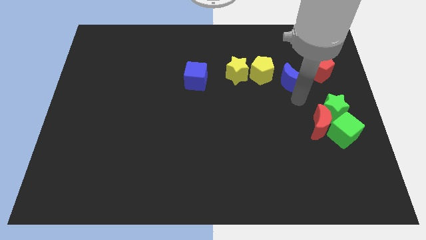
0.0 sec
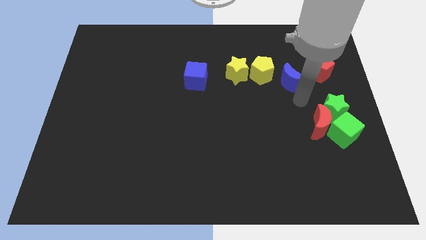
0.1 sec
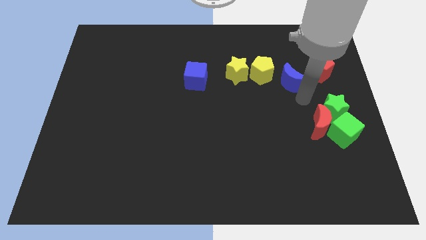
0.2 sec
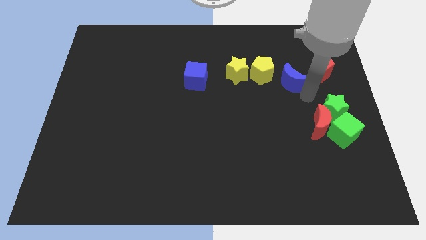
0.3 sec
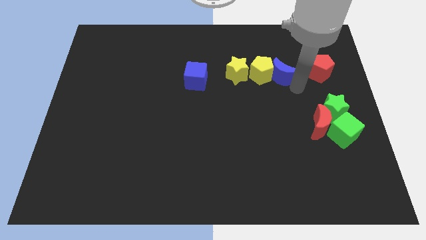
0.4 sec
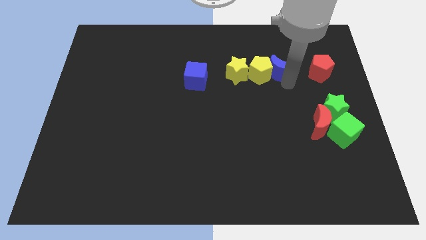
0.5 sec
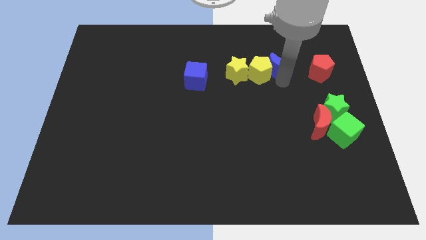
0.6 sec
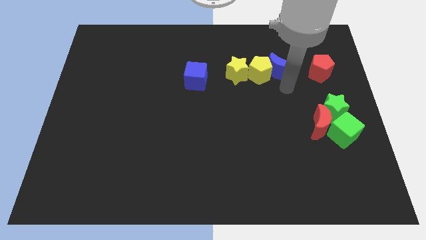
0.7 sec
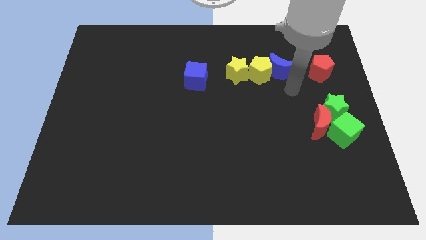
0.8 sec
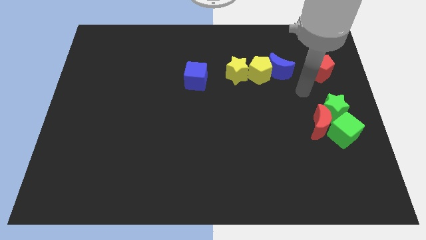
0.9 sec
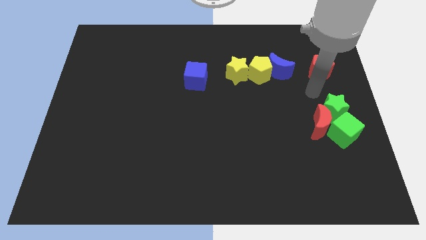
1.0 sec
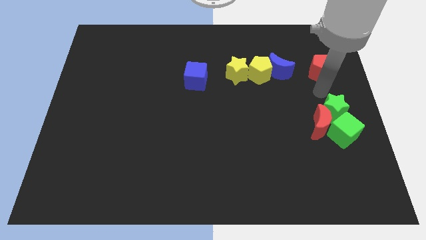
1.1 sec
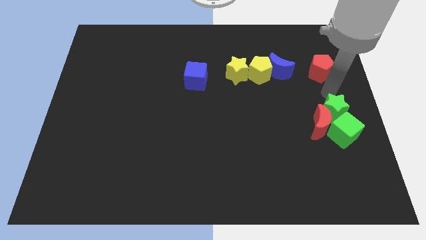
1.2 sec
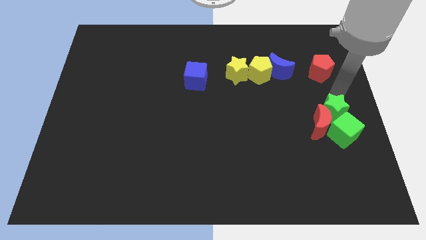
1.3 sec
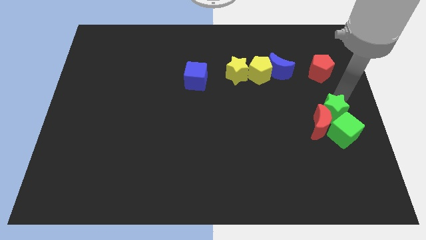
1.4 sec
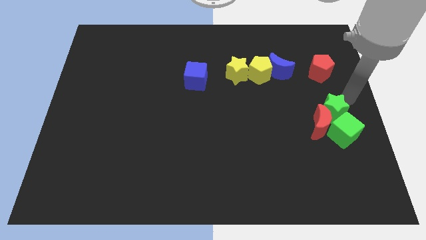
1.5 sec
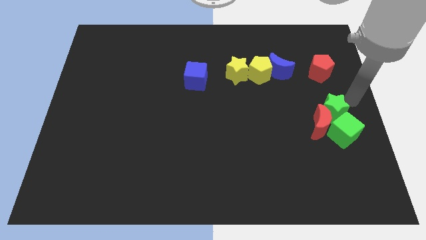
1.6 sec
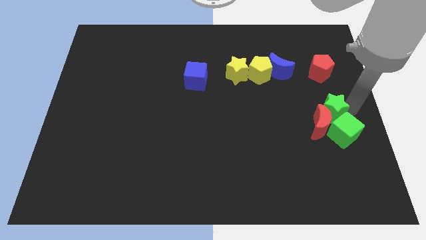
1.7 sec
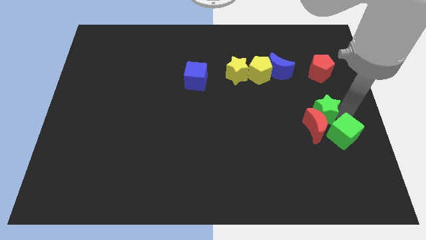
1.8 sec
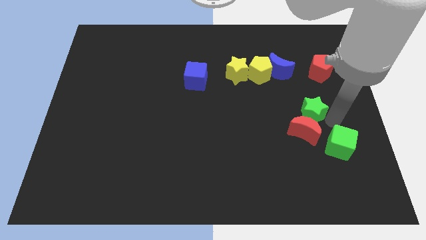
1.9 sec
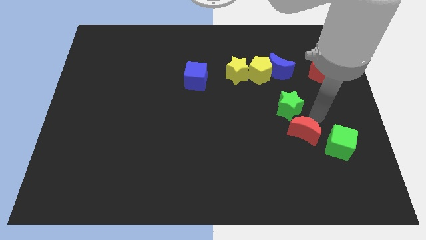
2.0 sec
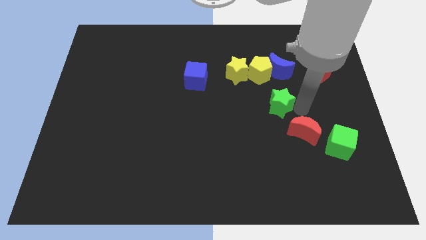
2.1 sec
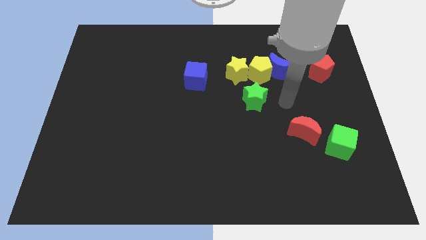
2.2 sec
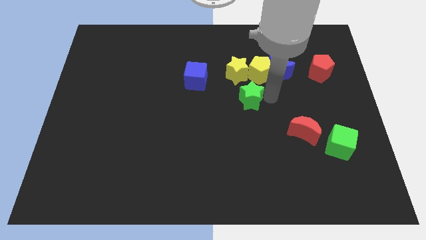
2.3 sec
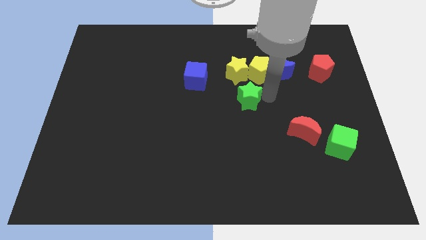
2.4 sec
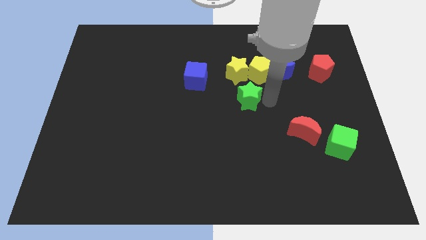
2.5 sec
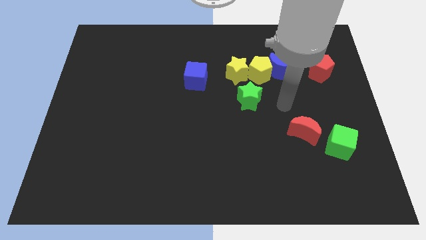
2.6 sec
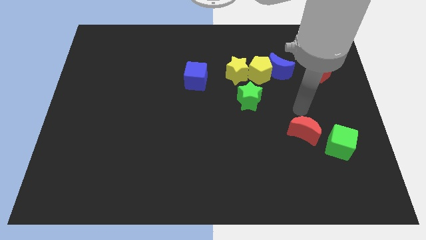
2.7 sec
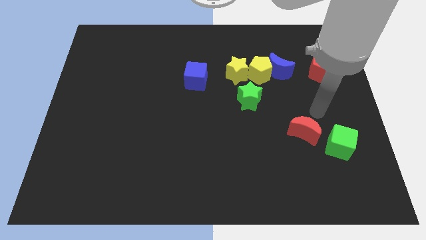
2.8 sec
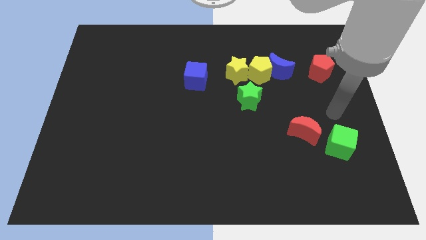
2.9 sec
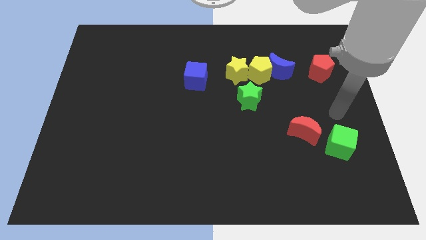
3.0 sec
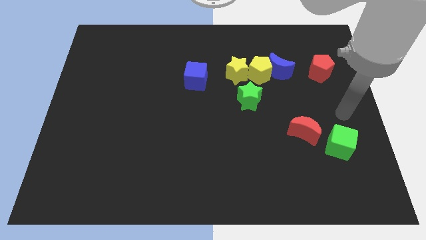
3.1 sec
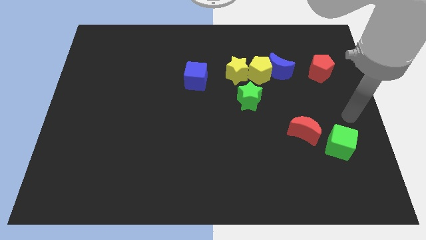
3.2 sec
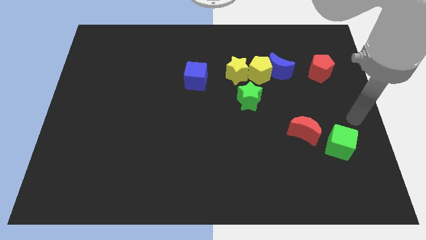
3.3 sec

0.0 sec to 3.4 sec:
slide the green star below the yellow star

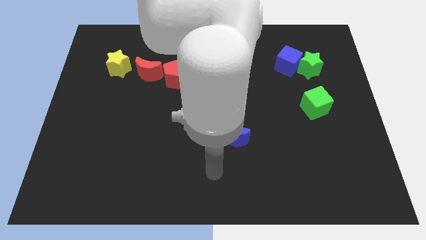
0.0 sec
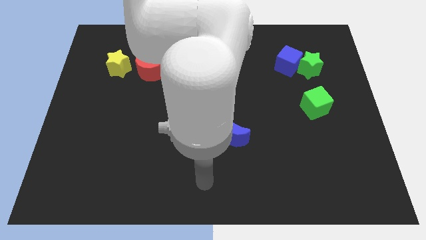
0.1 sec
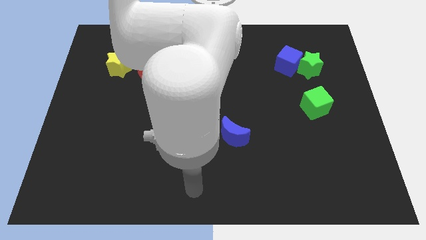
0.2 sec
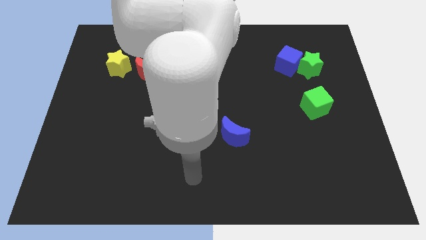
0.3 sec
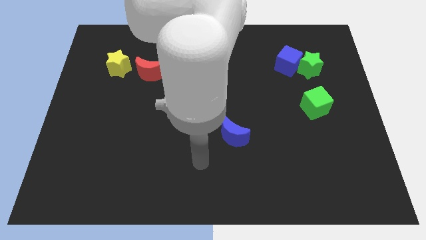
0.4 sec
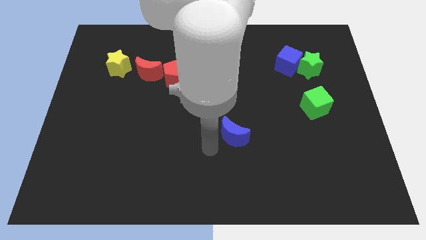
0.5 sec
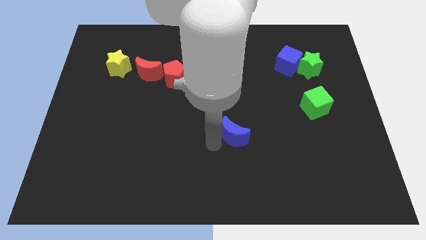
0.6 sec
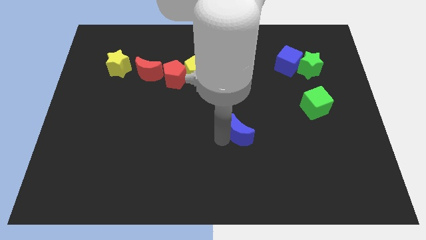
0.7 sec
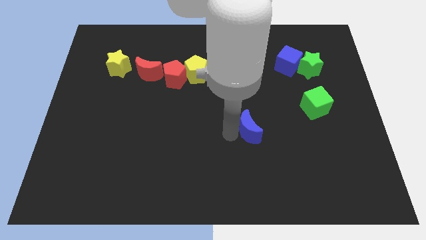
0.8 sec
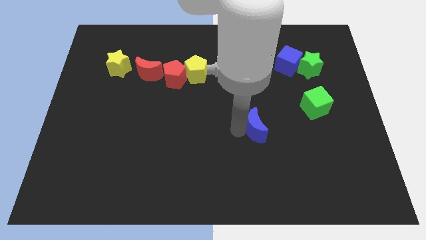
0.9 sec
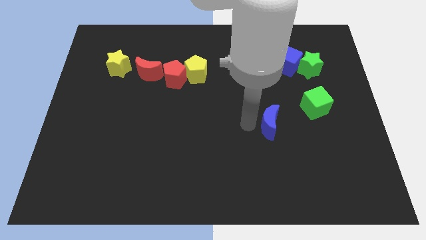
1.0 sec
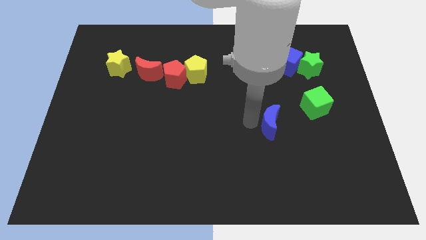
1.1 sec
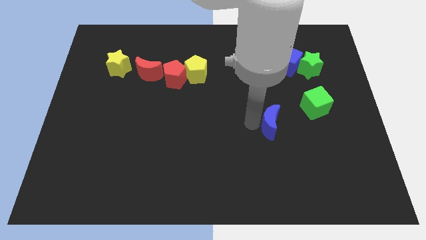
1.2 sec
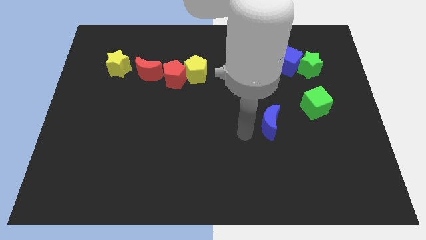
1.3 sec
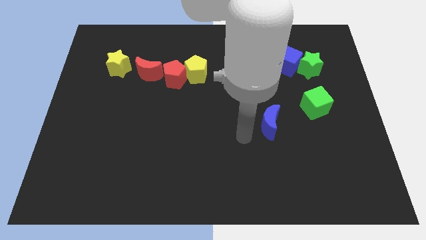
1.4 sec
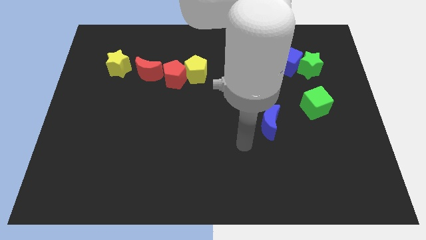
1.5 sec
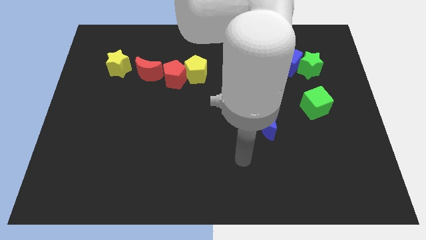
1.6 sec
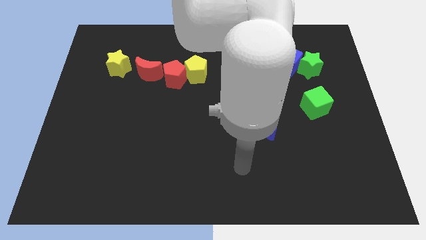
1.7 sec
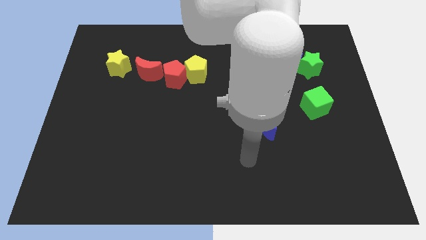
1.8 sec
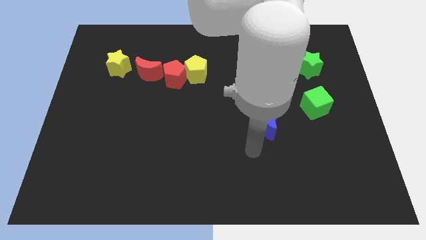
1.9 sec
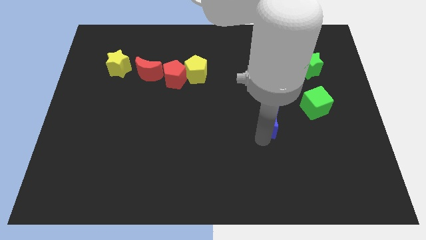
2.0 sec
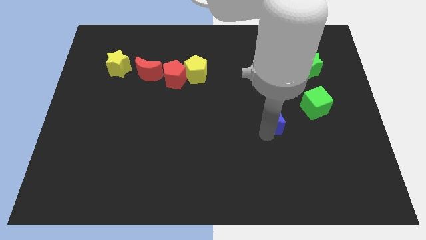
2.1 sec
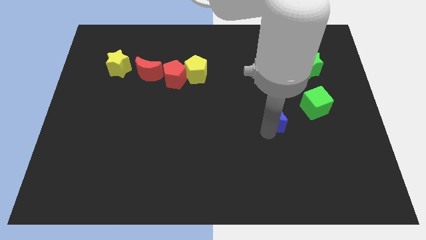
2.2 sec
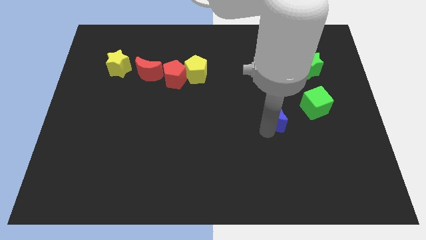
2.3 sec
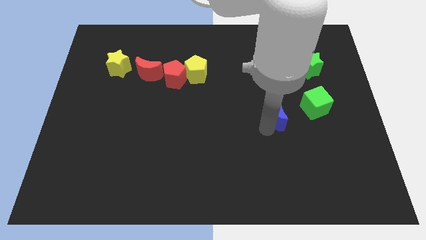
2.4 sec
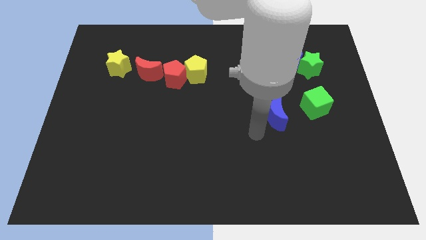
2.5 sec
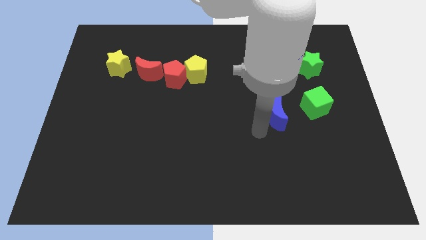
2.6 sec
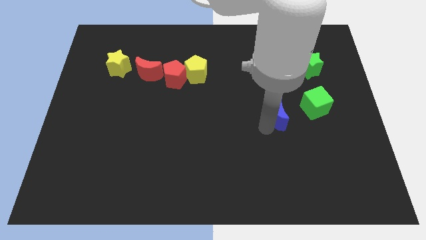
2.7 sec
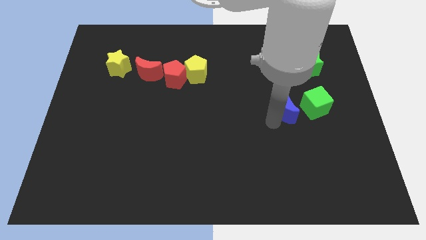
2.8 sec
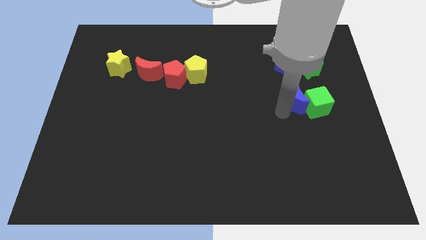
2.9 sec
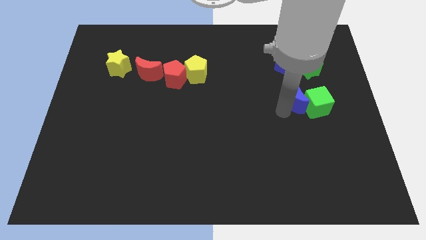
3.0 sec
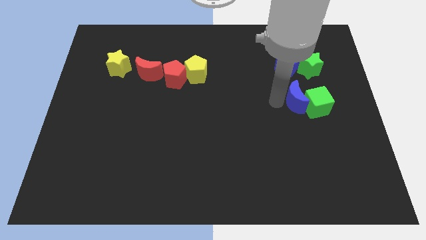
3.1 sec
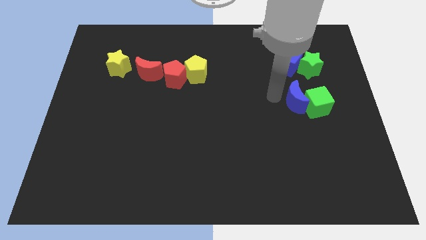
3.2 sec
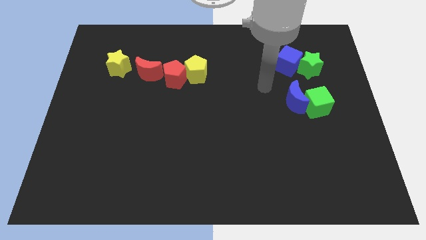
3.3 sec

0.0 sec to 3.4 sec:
push the blue moon into the green cube

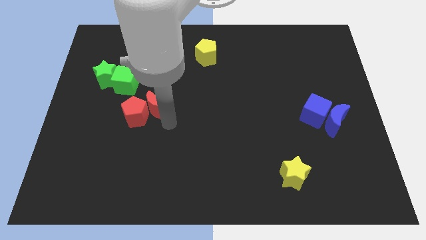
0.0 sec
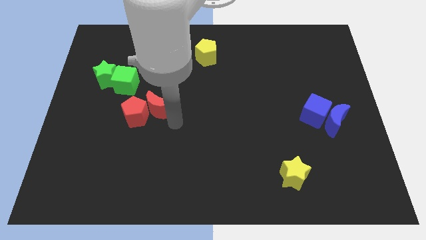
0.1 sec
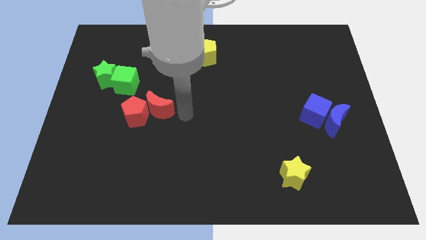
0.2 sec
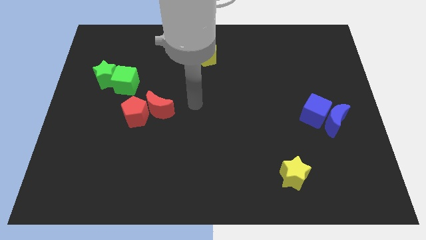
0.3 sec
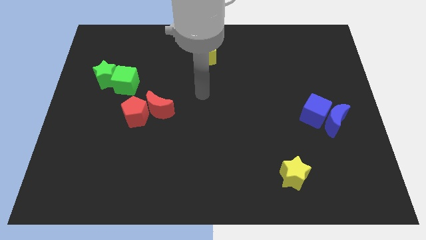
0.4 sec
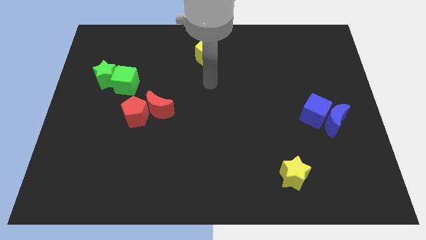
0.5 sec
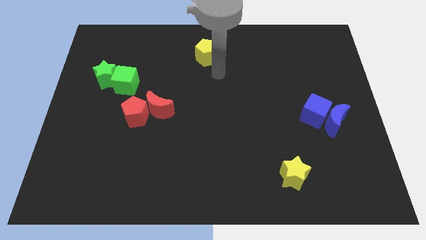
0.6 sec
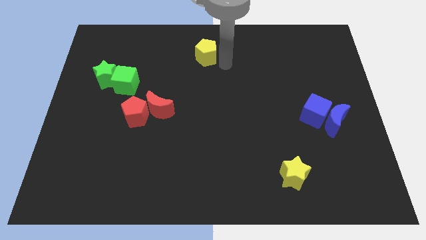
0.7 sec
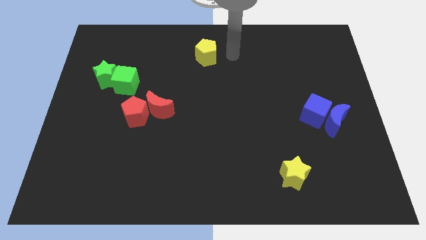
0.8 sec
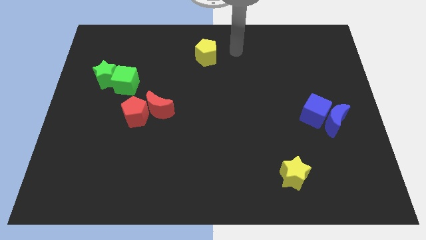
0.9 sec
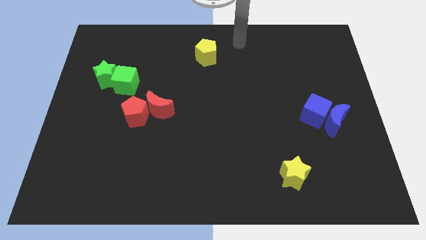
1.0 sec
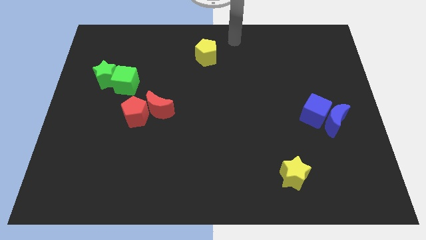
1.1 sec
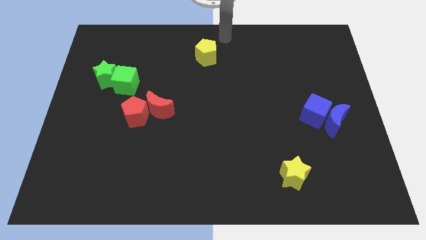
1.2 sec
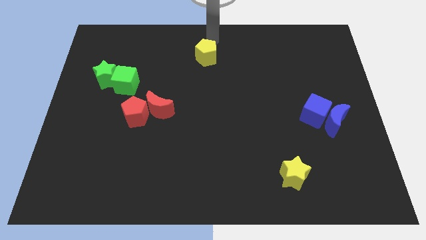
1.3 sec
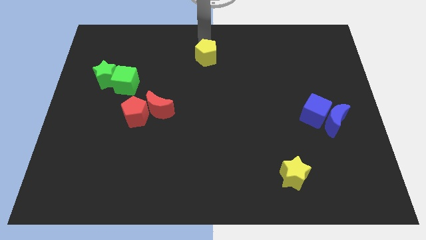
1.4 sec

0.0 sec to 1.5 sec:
move your arm to the top of the yellow pentagon

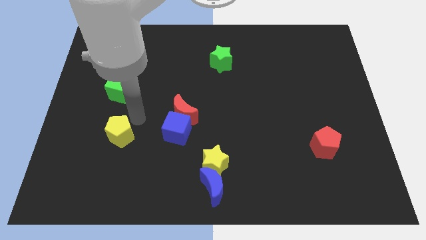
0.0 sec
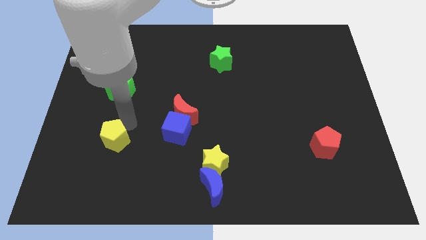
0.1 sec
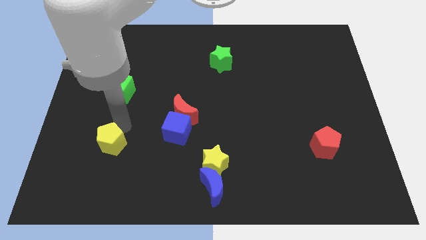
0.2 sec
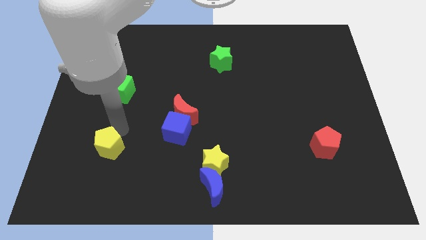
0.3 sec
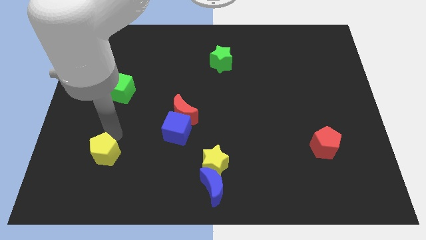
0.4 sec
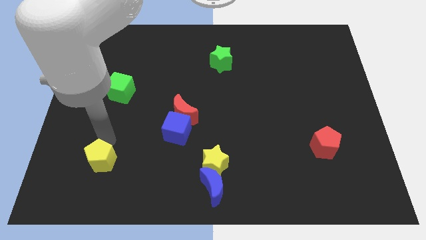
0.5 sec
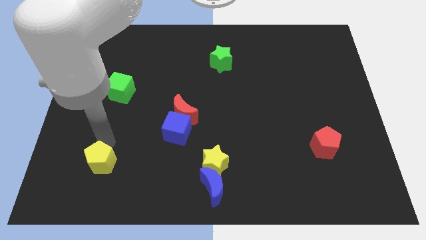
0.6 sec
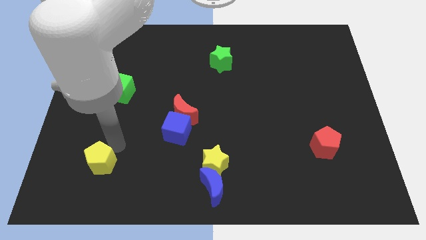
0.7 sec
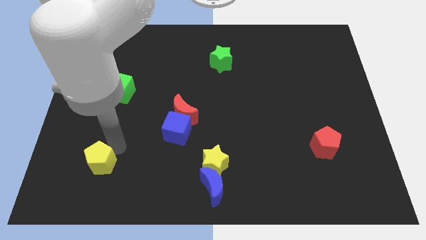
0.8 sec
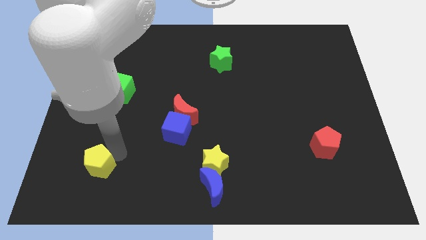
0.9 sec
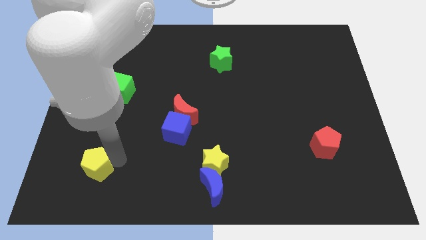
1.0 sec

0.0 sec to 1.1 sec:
place yellow pentagon vertically below green cube
